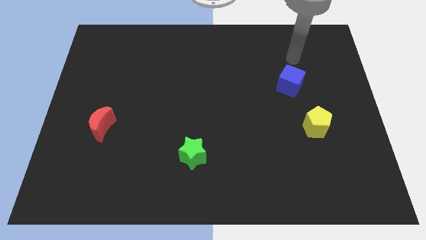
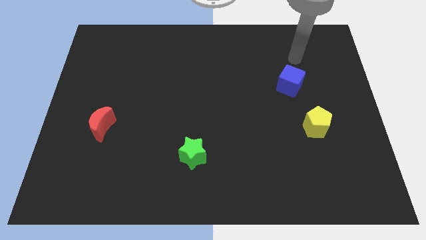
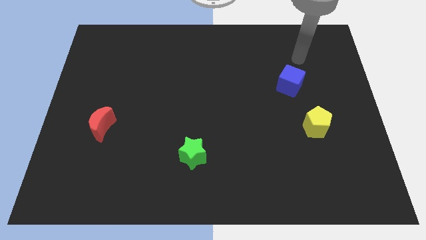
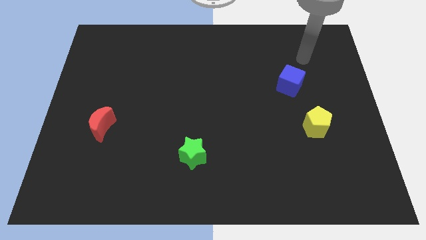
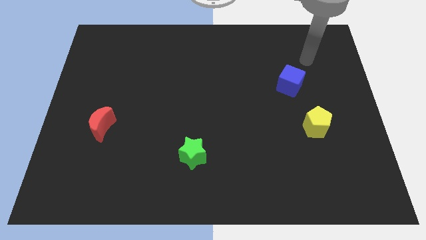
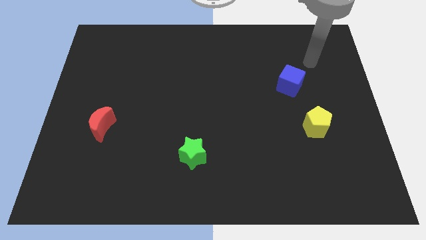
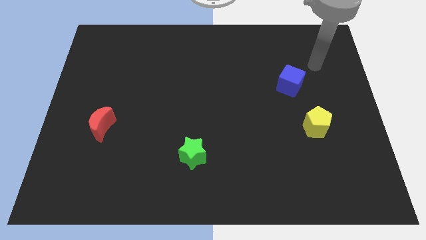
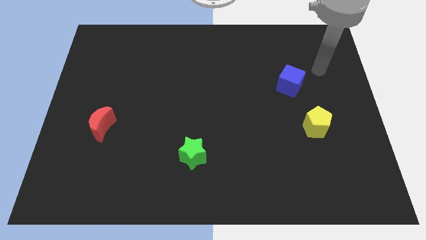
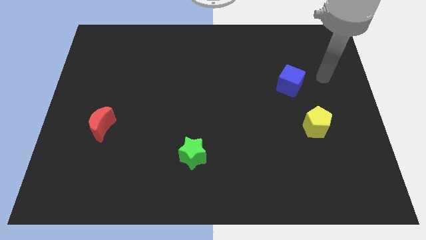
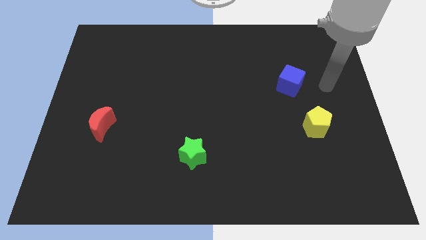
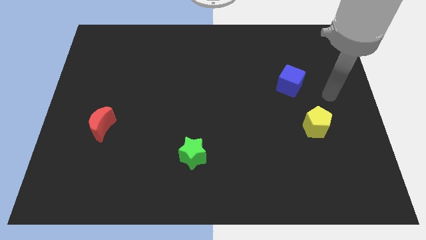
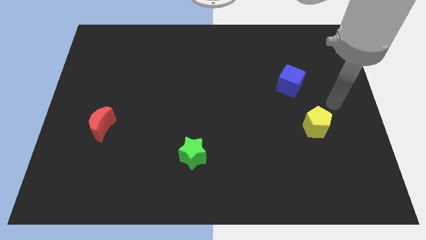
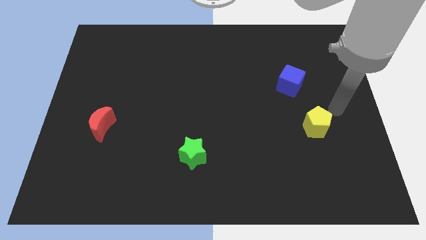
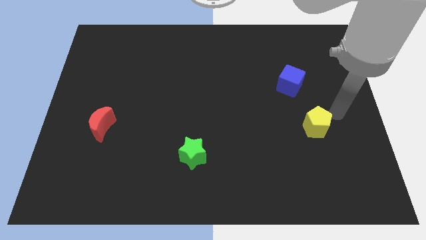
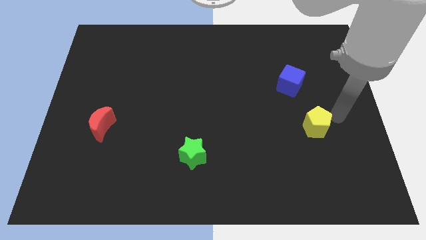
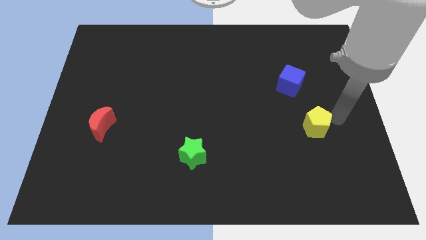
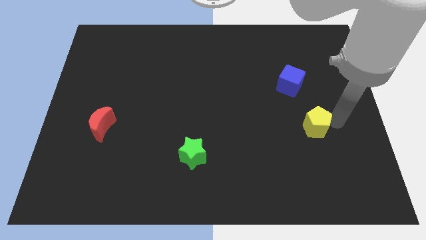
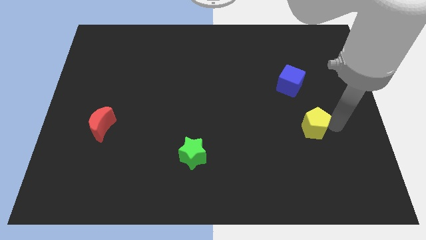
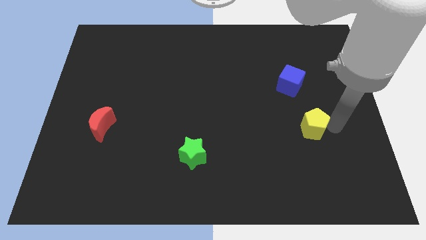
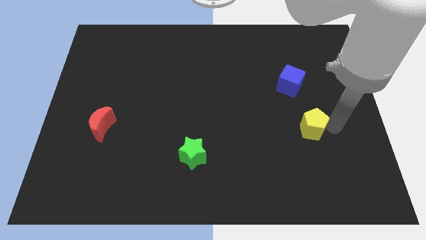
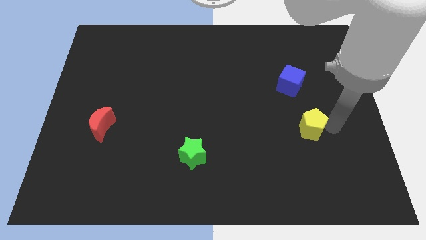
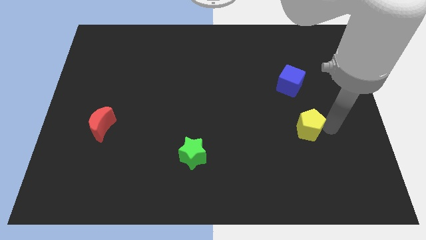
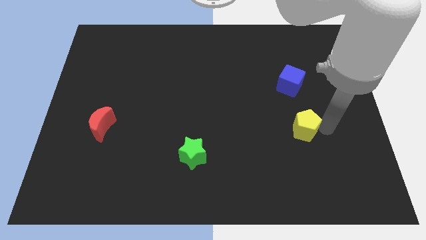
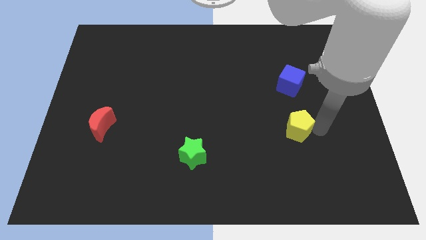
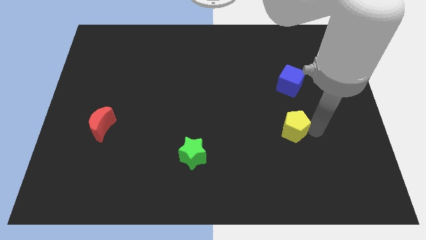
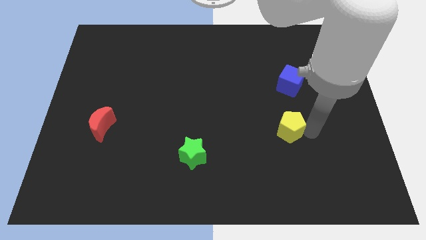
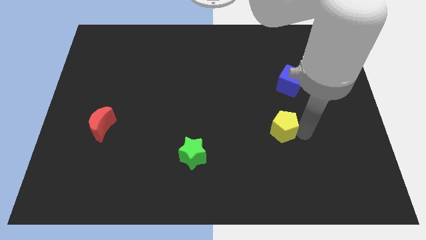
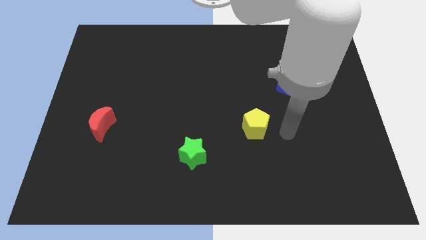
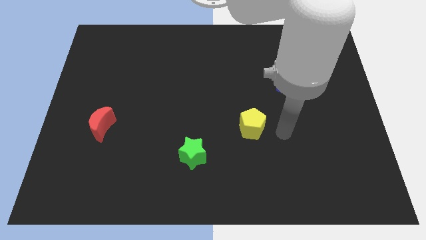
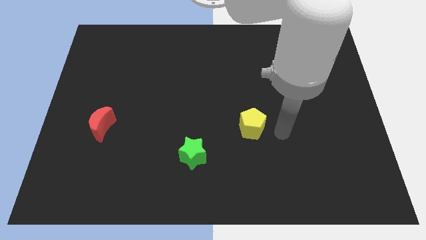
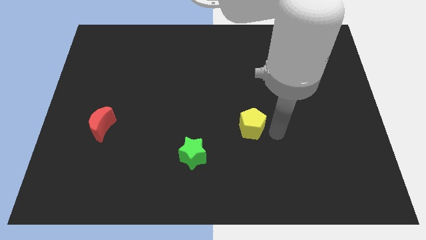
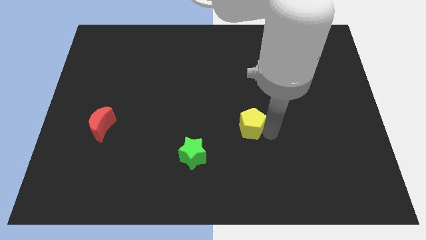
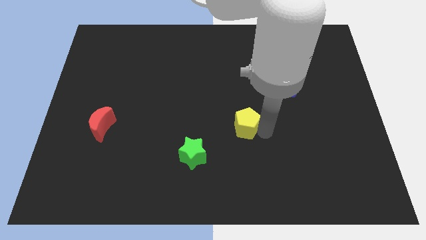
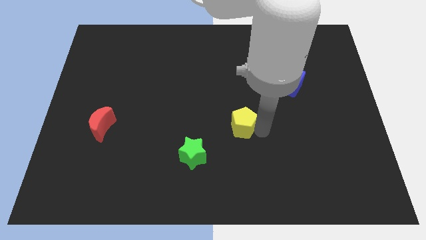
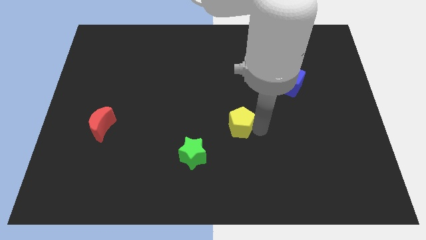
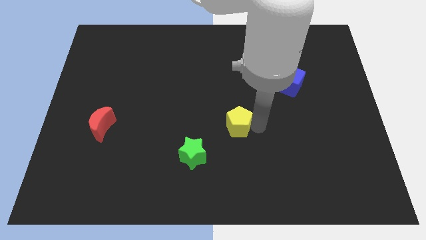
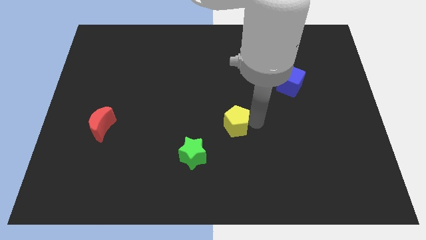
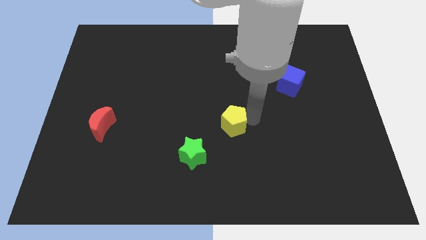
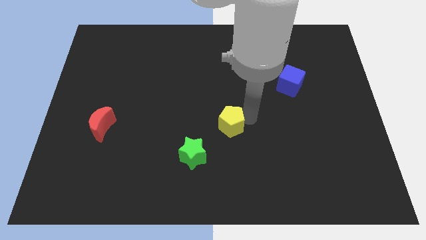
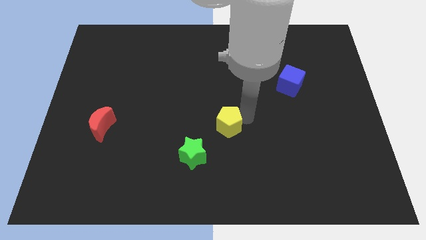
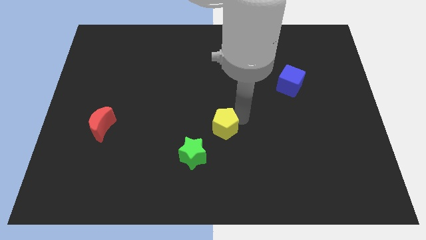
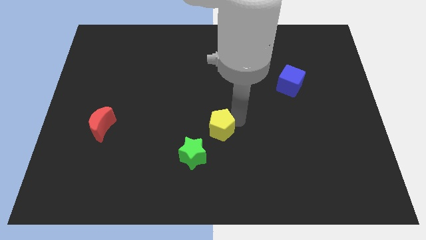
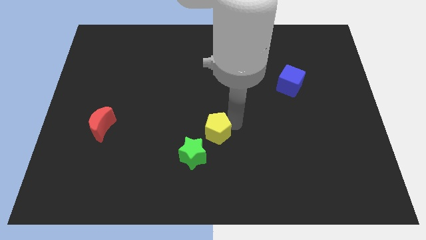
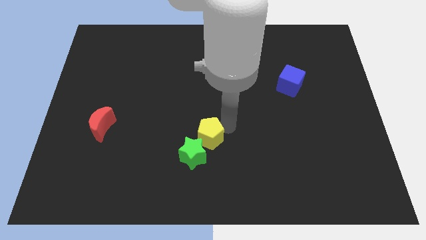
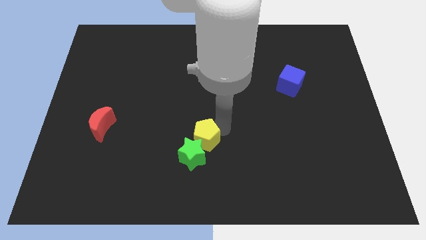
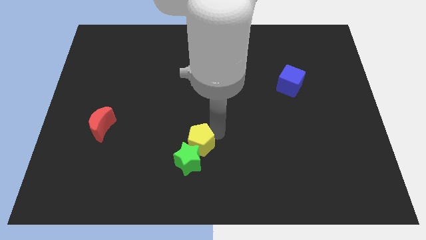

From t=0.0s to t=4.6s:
move the pentagon towards the star

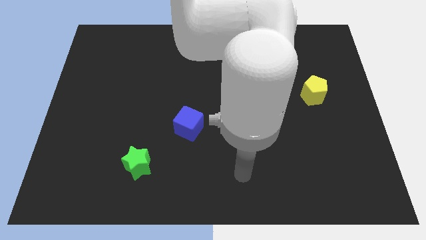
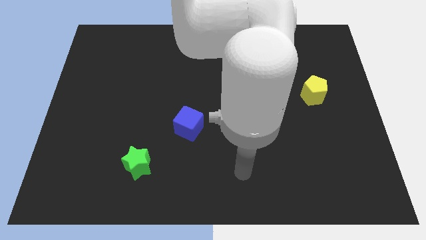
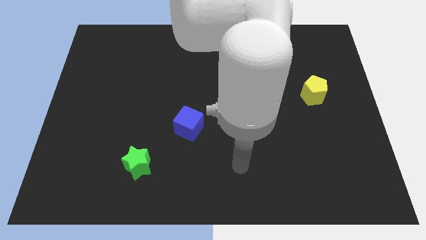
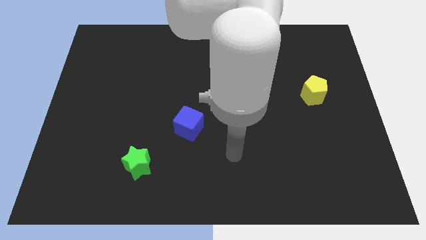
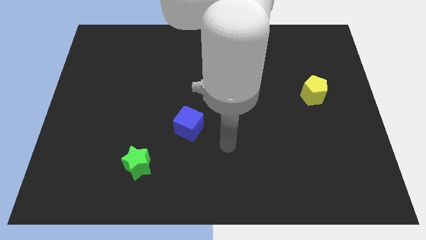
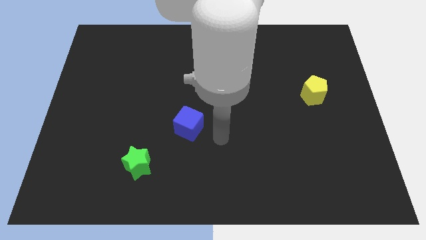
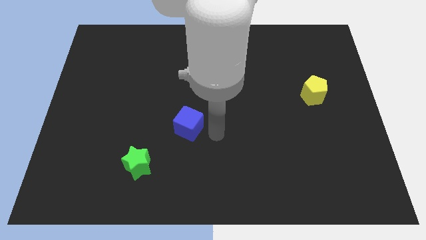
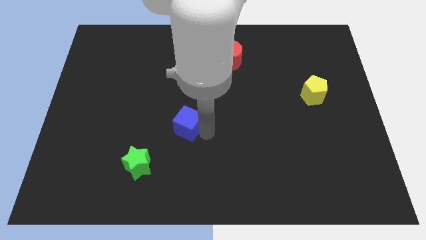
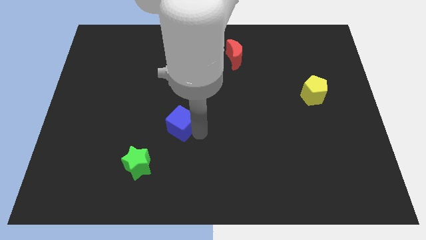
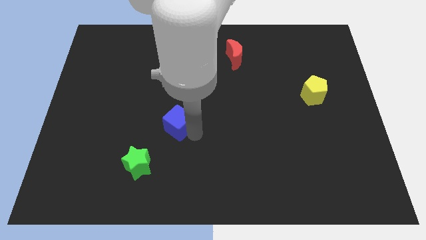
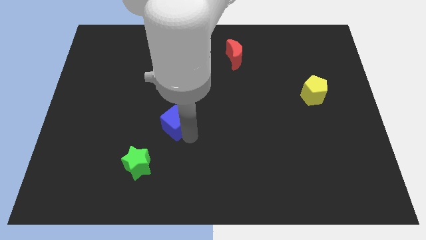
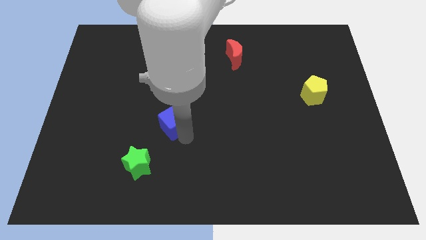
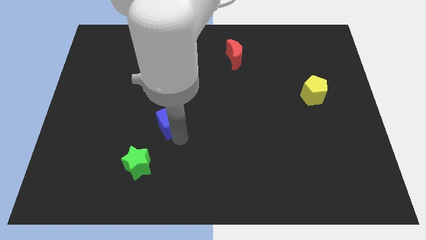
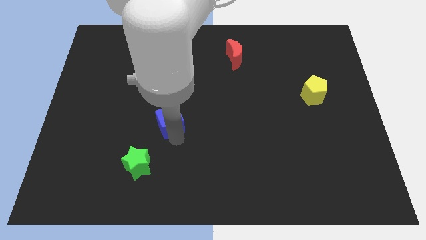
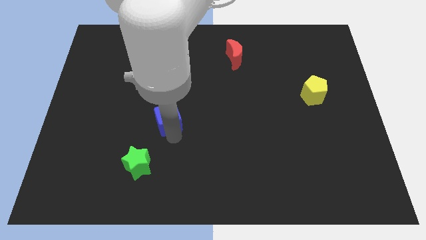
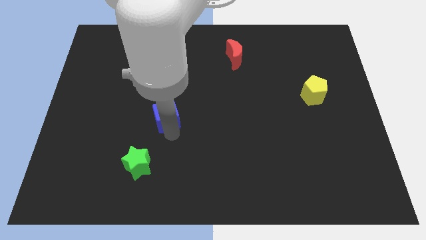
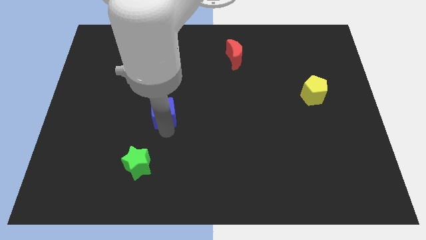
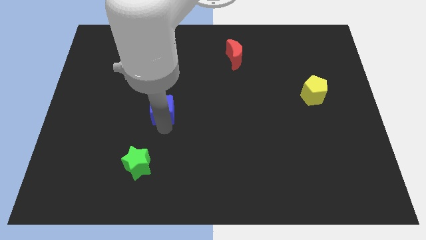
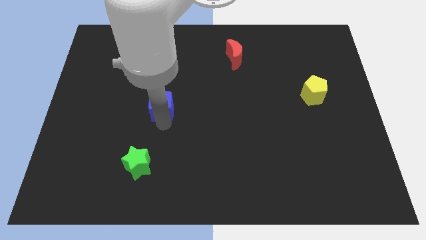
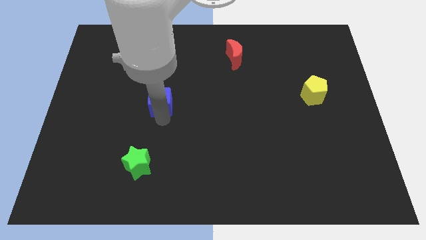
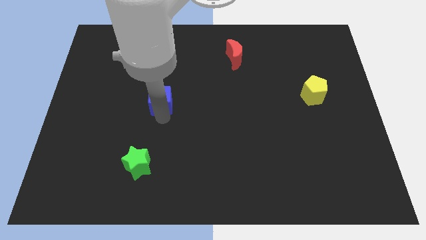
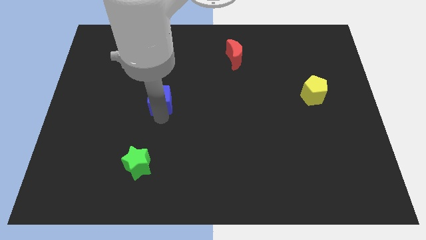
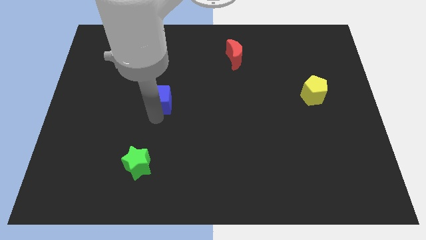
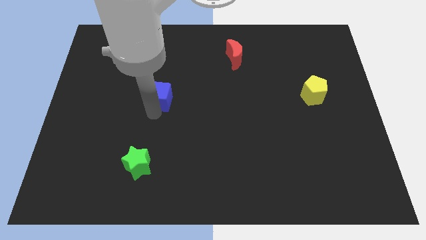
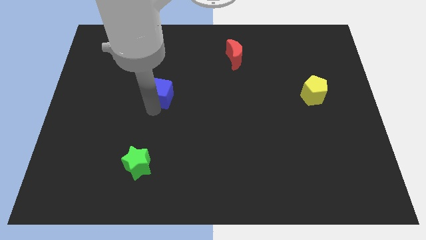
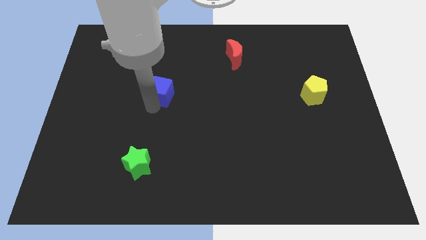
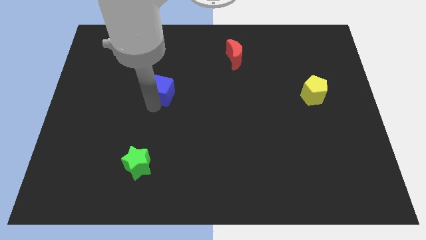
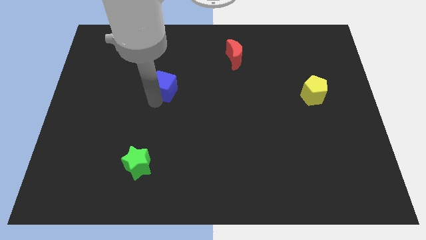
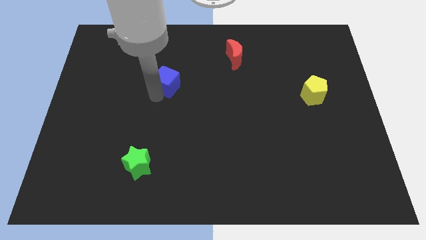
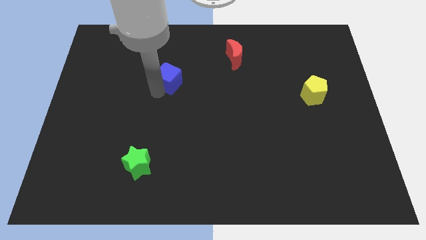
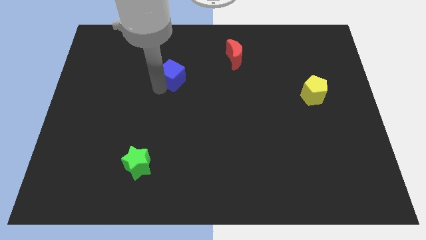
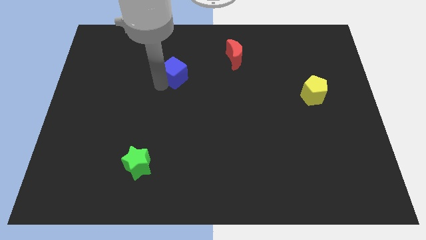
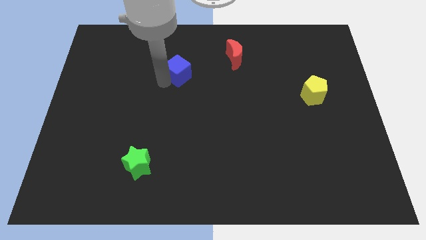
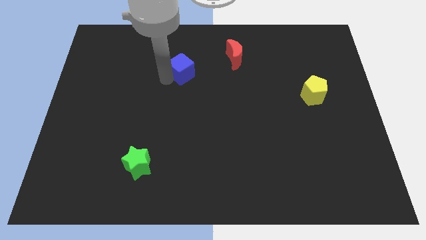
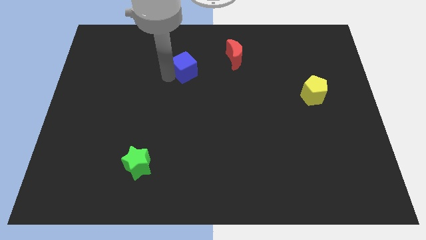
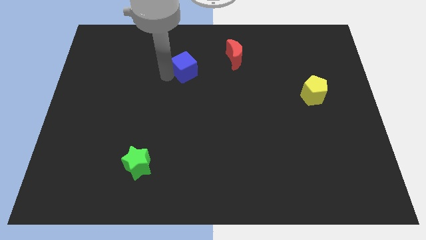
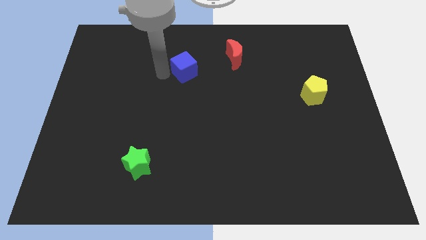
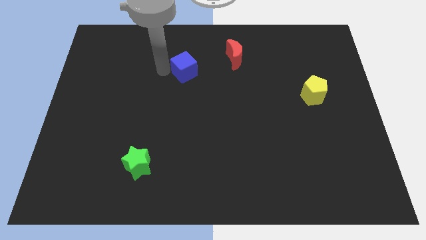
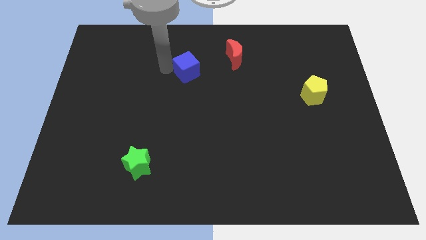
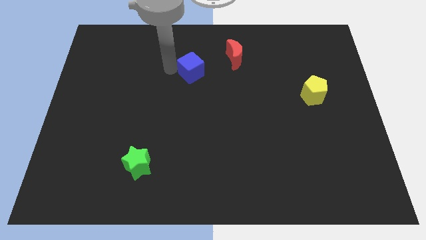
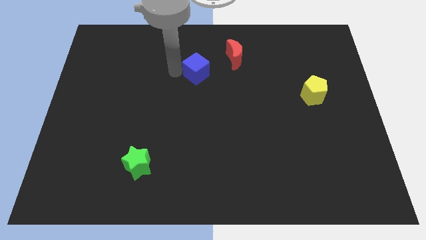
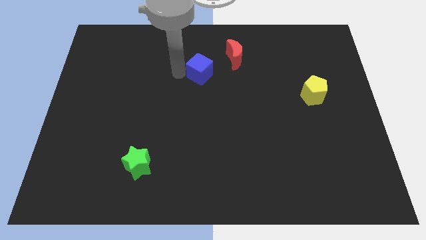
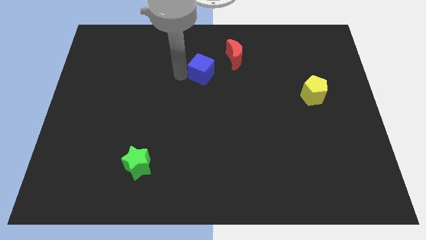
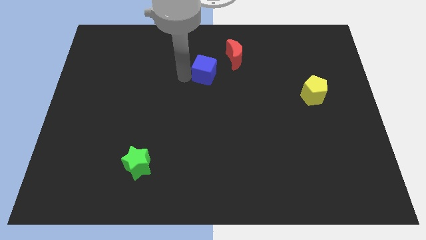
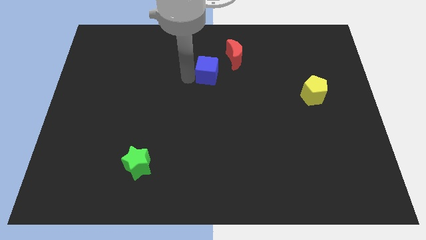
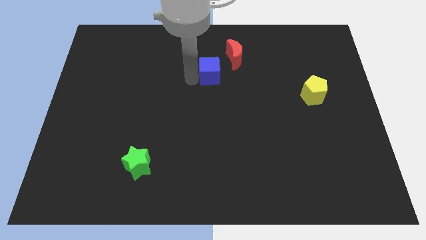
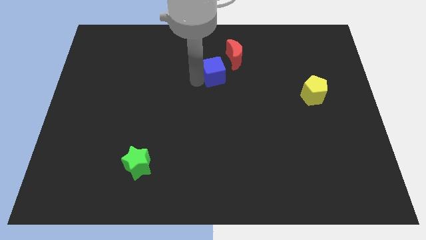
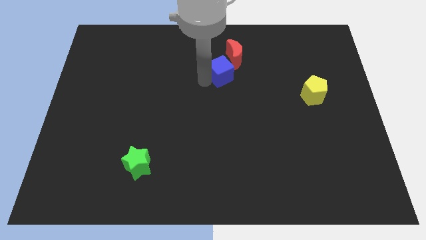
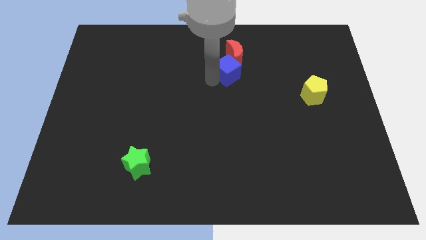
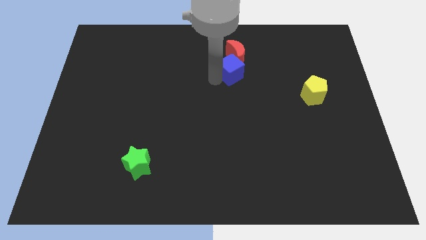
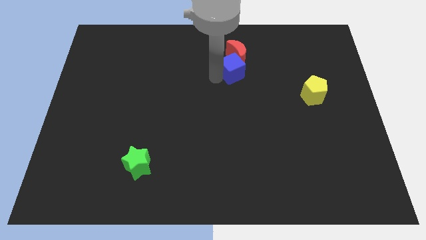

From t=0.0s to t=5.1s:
push the blue cube to the moon
